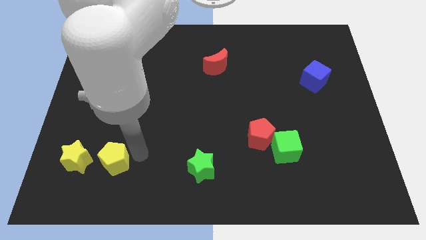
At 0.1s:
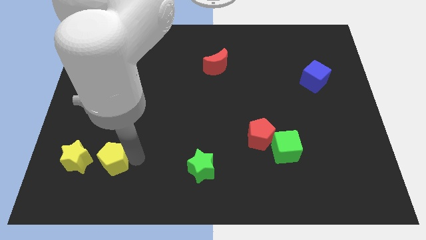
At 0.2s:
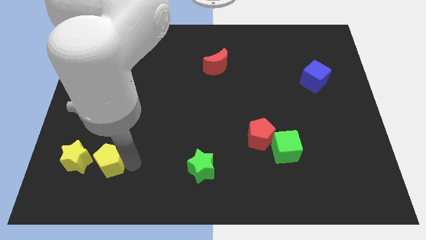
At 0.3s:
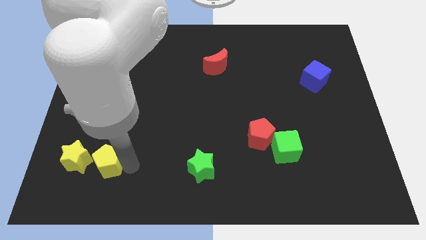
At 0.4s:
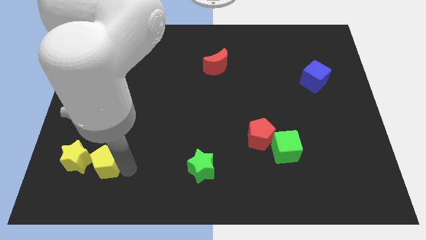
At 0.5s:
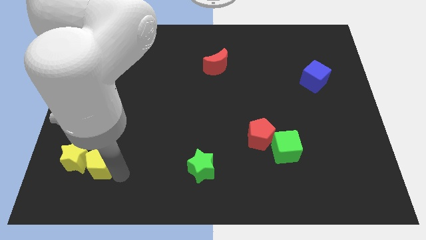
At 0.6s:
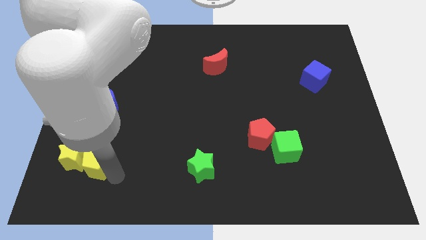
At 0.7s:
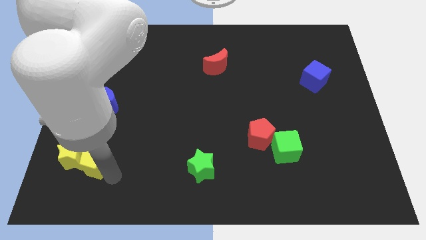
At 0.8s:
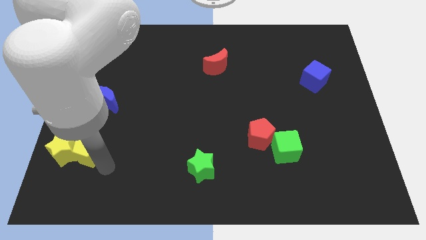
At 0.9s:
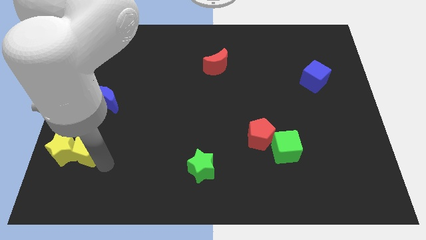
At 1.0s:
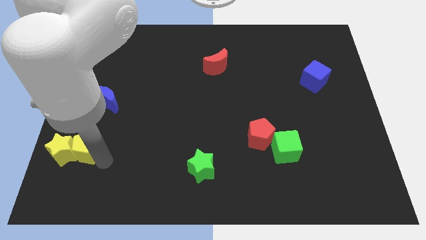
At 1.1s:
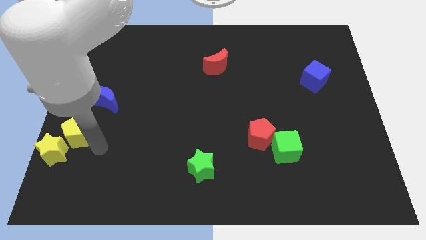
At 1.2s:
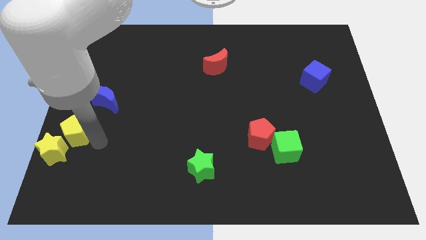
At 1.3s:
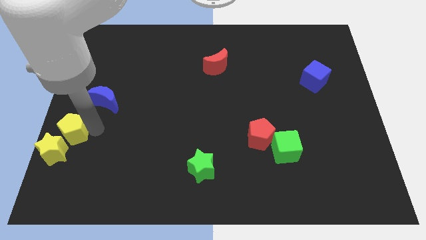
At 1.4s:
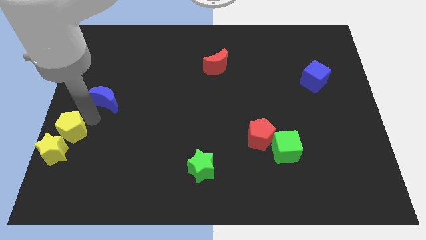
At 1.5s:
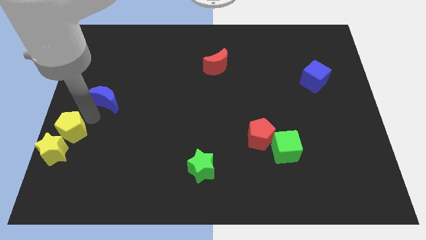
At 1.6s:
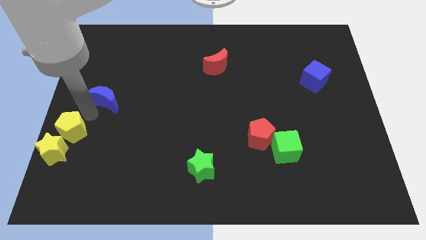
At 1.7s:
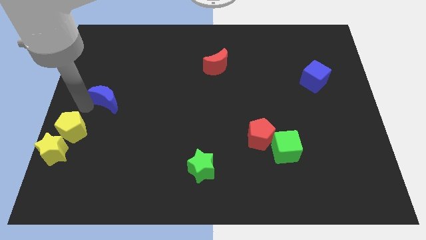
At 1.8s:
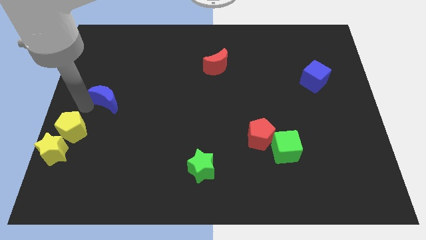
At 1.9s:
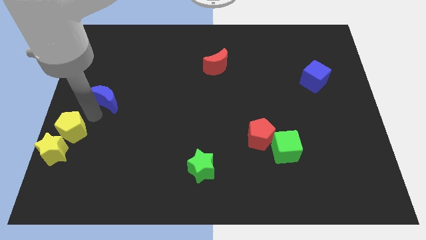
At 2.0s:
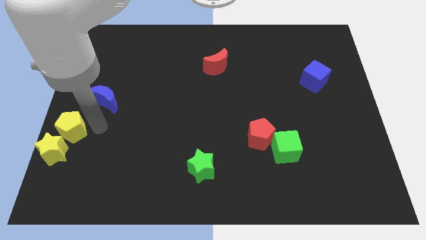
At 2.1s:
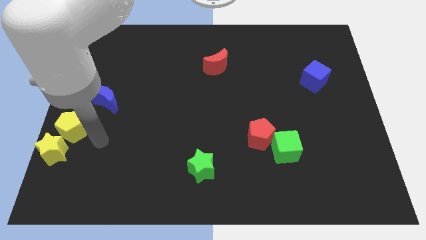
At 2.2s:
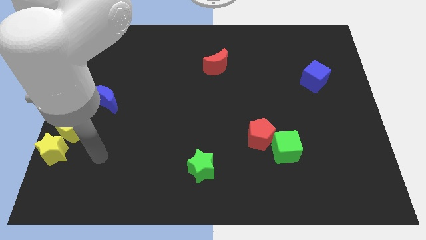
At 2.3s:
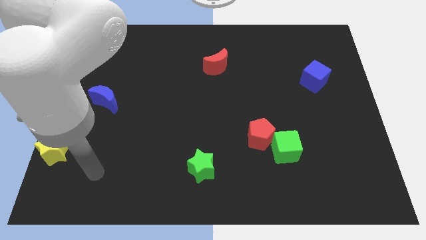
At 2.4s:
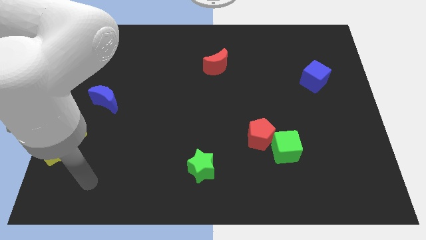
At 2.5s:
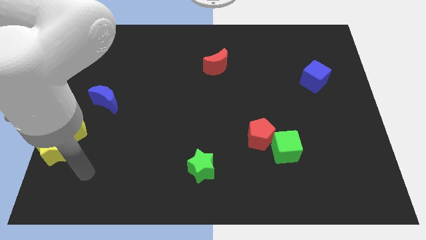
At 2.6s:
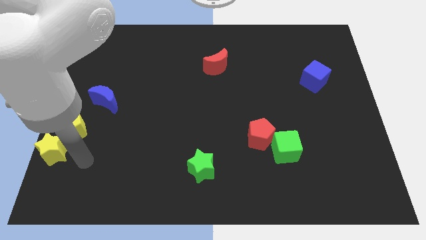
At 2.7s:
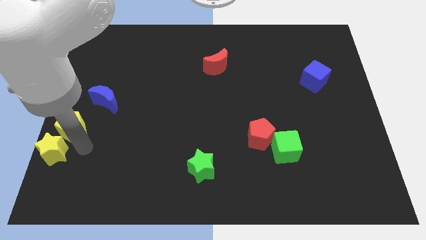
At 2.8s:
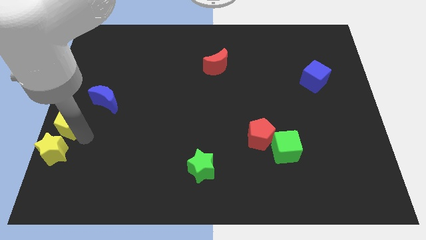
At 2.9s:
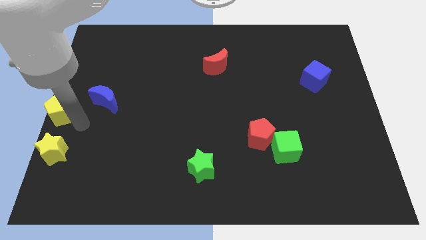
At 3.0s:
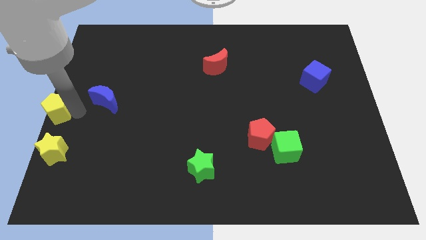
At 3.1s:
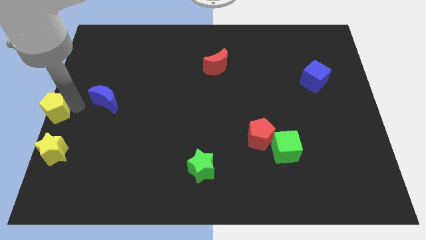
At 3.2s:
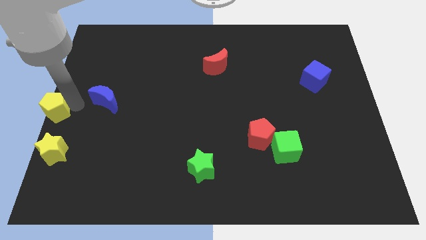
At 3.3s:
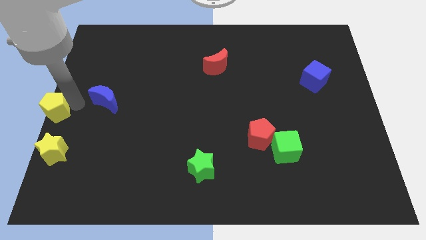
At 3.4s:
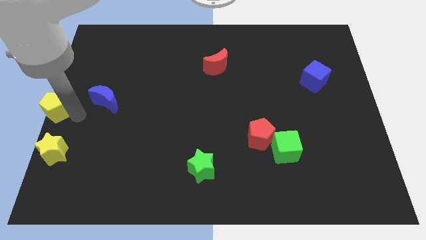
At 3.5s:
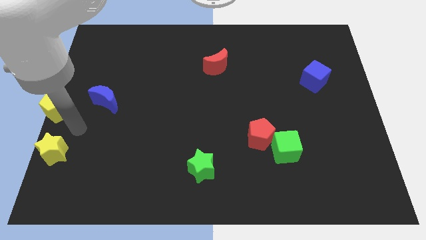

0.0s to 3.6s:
push yellow pentagon to the left center of the board

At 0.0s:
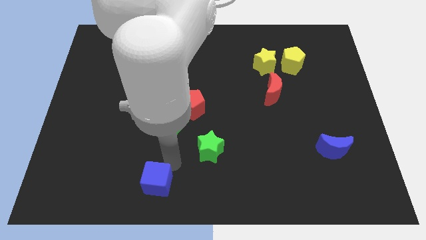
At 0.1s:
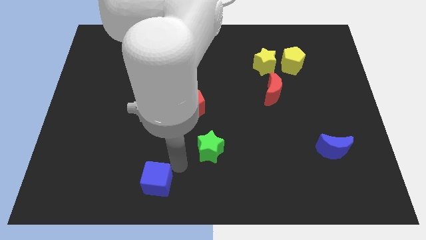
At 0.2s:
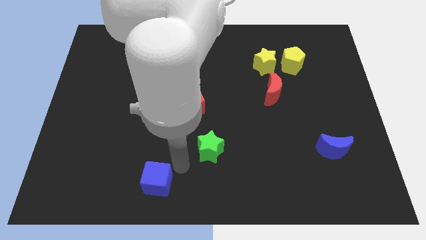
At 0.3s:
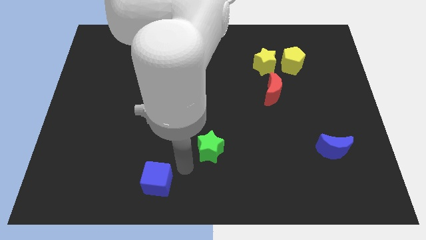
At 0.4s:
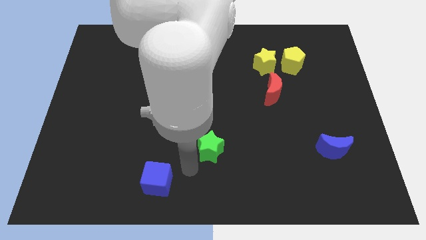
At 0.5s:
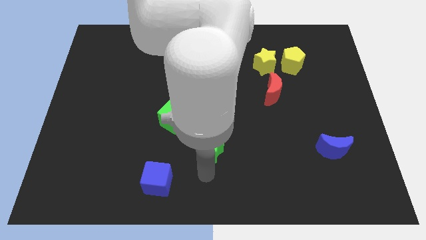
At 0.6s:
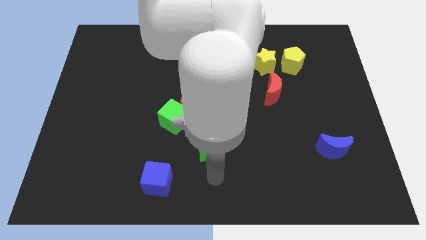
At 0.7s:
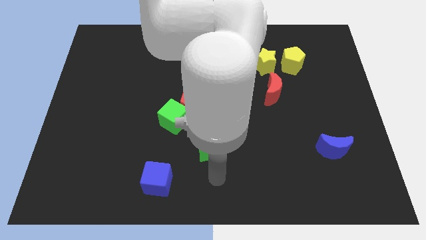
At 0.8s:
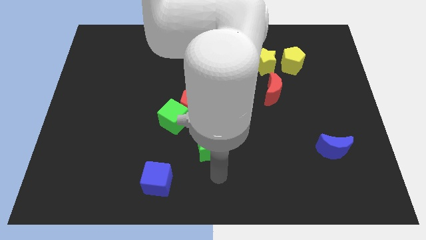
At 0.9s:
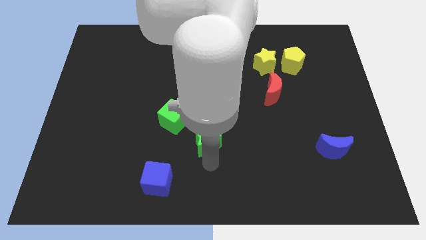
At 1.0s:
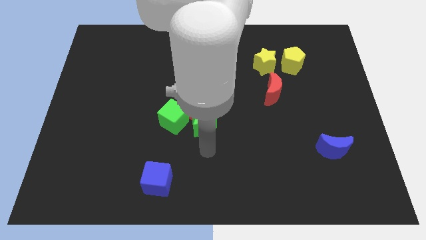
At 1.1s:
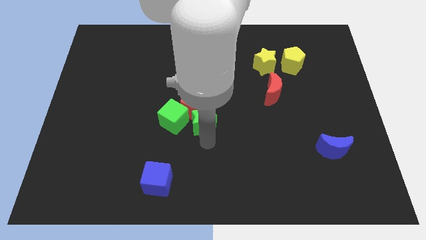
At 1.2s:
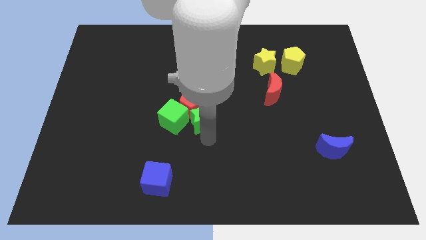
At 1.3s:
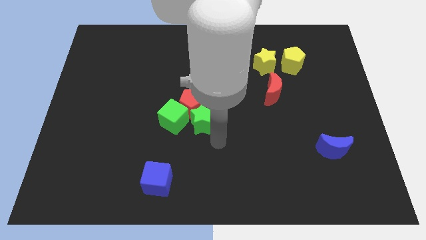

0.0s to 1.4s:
move the green star to the right of the green cube

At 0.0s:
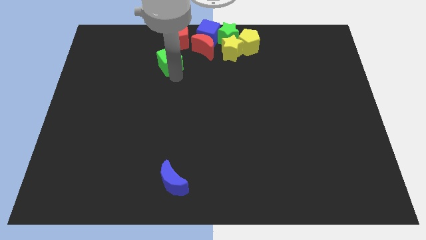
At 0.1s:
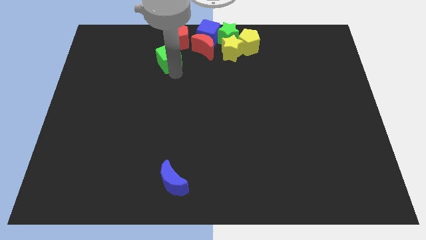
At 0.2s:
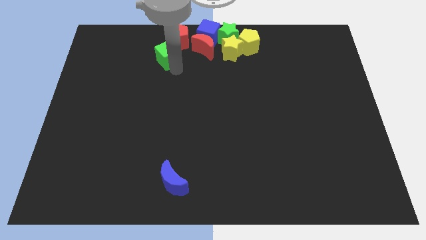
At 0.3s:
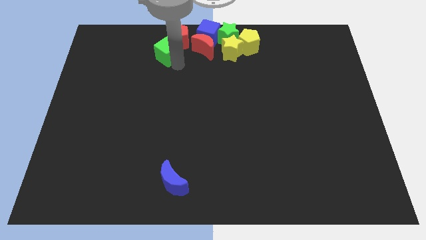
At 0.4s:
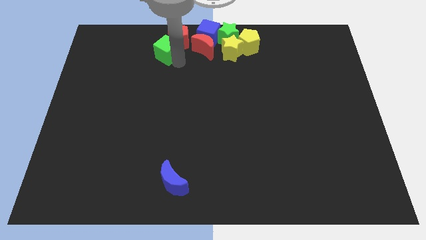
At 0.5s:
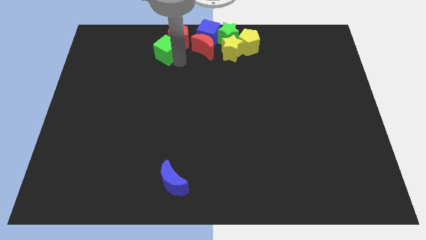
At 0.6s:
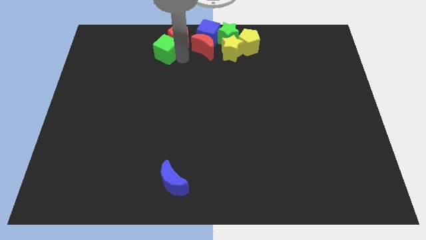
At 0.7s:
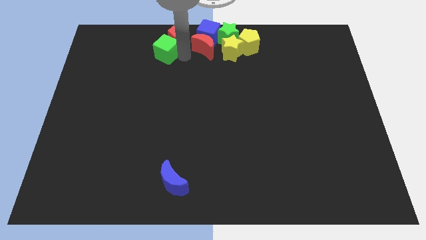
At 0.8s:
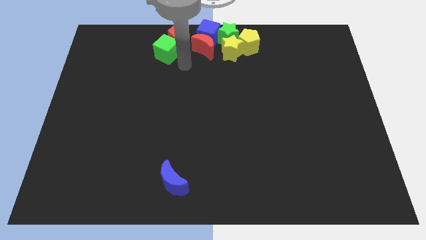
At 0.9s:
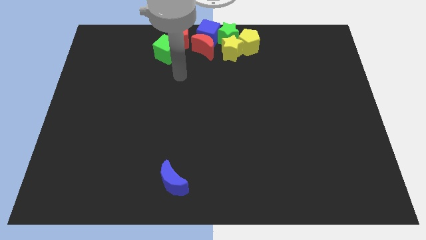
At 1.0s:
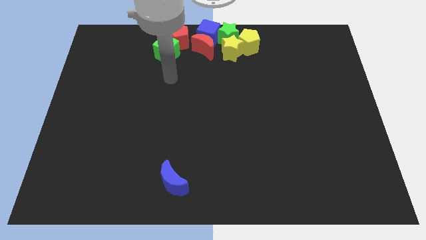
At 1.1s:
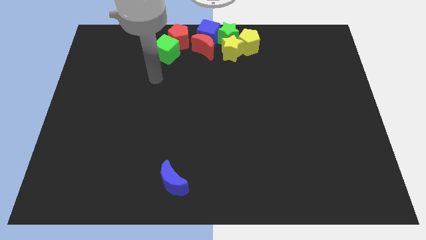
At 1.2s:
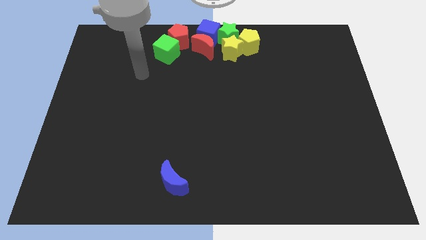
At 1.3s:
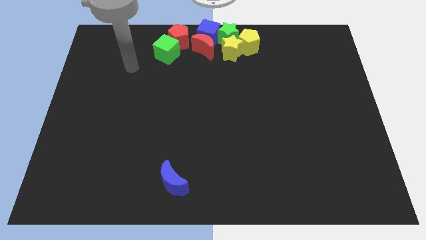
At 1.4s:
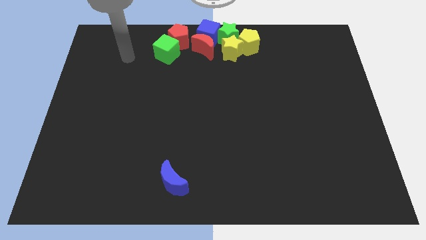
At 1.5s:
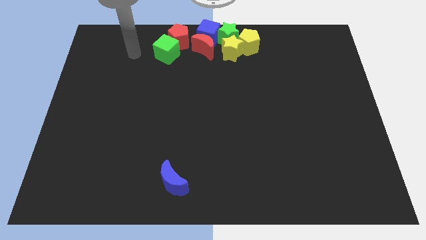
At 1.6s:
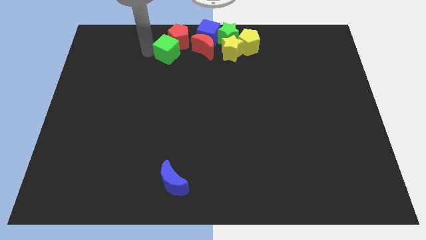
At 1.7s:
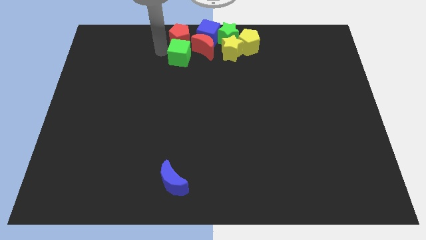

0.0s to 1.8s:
push the green cube into the red pentagon

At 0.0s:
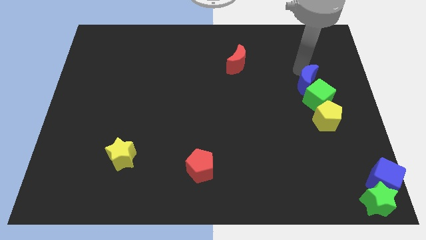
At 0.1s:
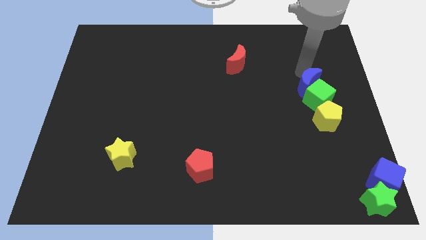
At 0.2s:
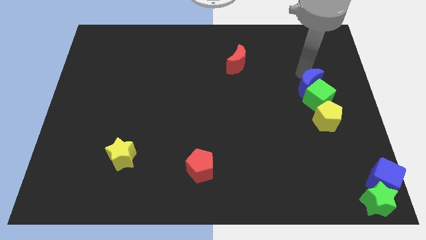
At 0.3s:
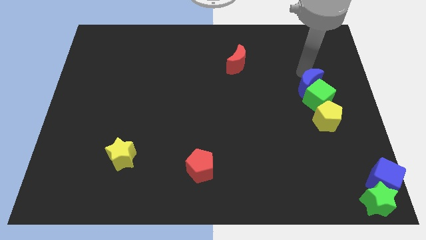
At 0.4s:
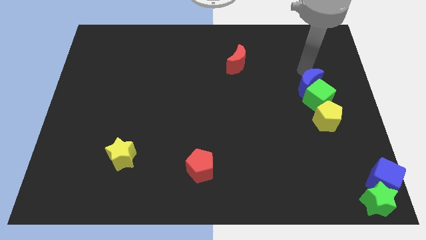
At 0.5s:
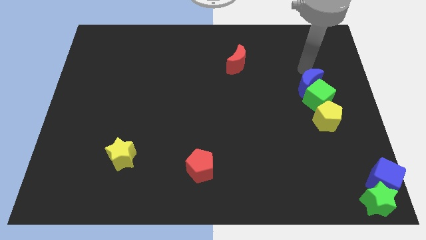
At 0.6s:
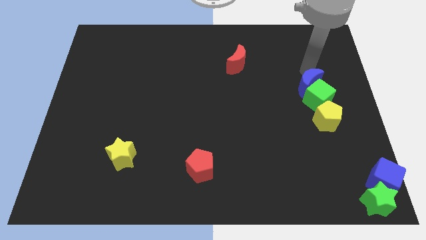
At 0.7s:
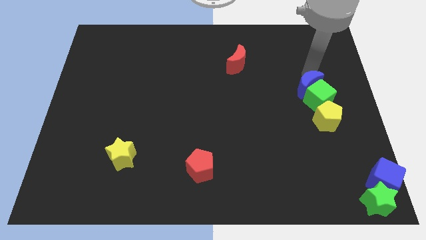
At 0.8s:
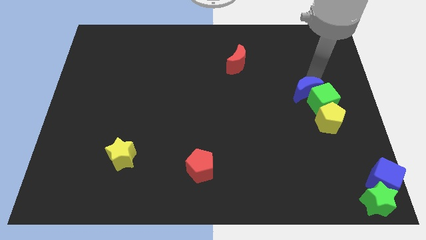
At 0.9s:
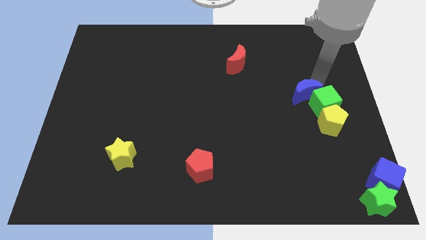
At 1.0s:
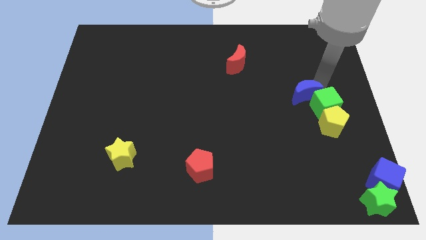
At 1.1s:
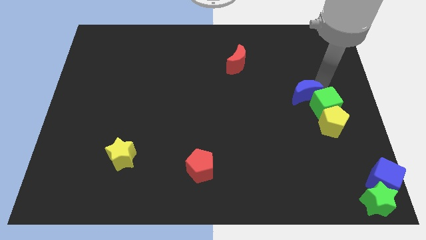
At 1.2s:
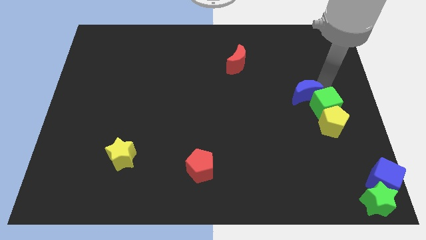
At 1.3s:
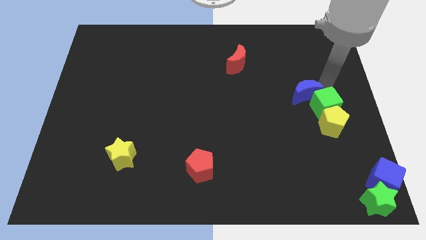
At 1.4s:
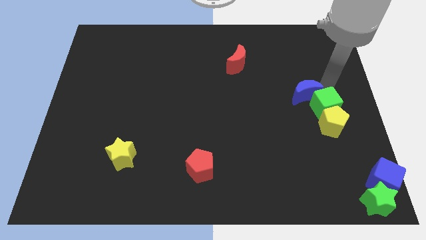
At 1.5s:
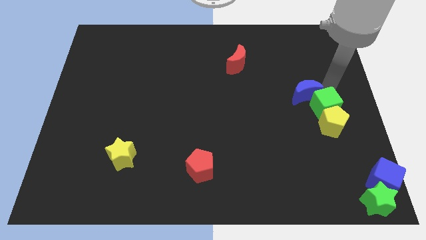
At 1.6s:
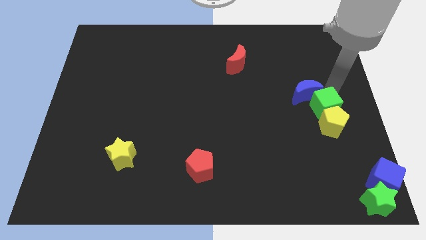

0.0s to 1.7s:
push the blue crescent into the yellow pentagon

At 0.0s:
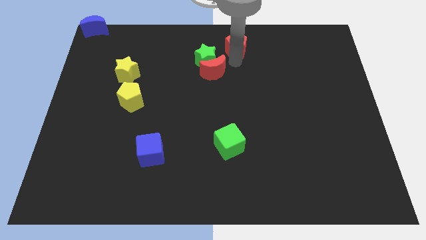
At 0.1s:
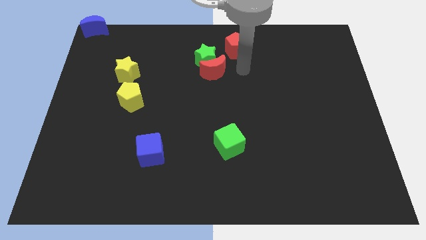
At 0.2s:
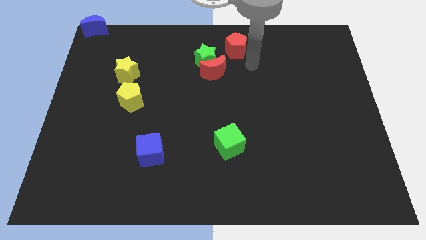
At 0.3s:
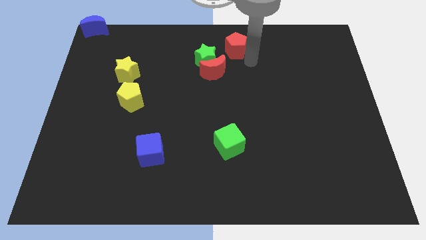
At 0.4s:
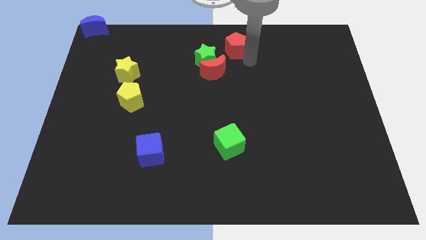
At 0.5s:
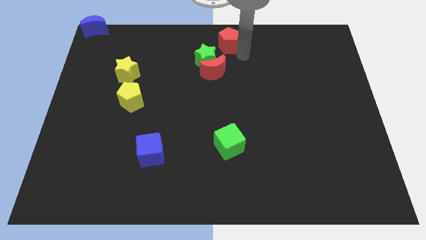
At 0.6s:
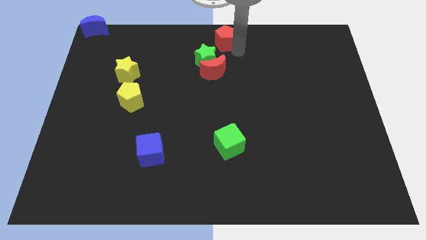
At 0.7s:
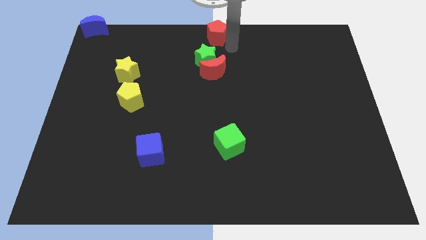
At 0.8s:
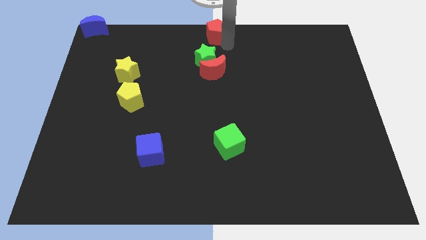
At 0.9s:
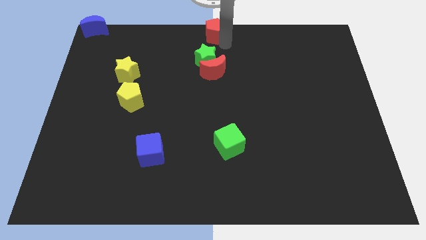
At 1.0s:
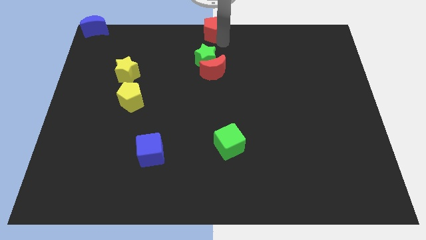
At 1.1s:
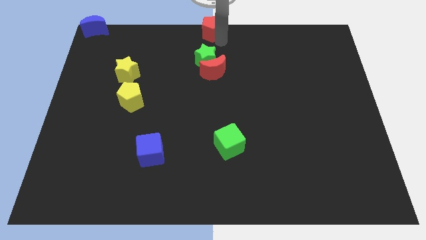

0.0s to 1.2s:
place the red pentagon at the top of green star
